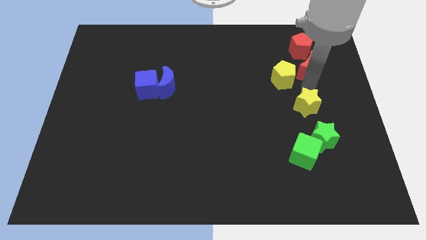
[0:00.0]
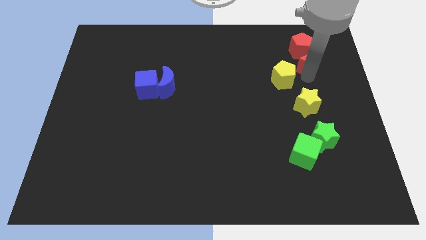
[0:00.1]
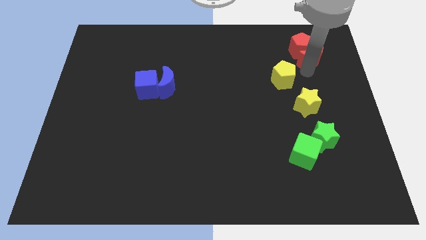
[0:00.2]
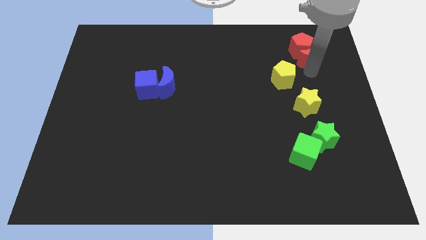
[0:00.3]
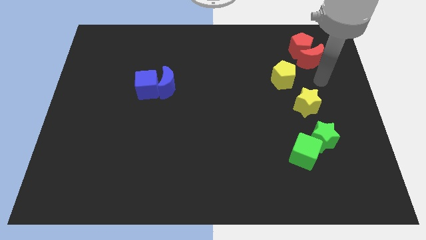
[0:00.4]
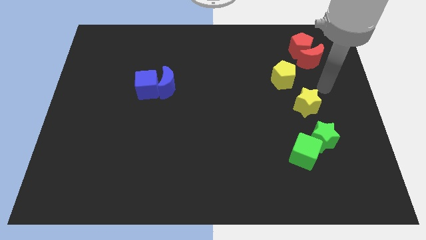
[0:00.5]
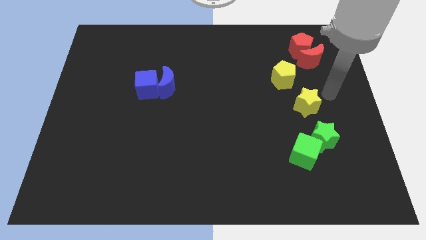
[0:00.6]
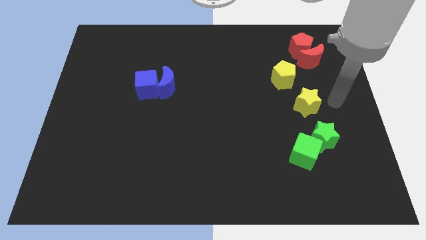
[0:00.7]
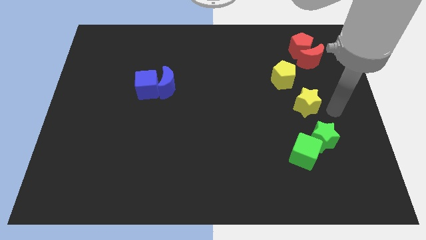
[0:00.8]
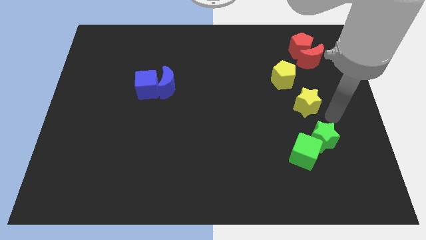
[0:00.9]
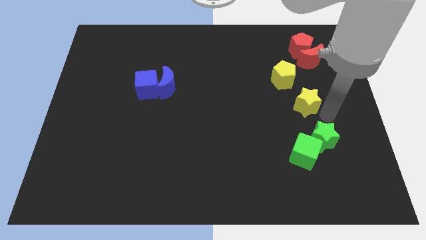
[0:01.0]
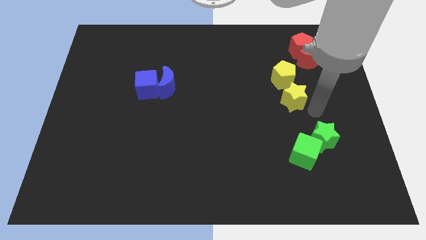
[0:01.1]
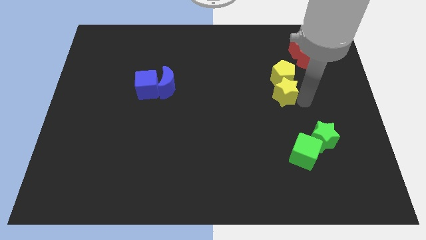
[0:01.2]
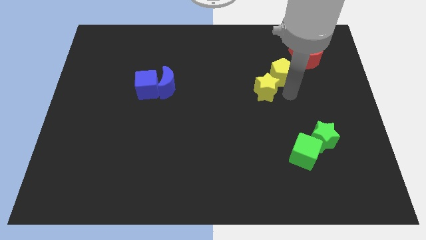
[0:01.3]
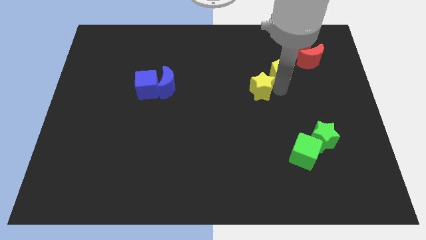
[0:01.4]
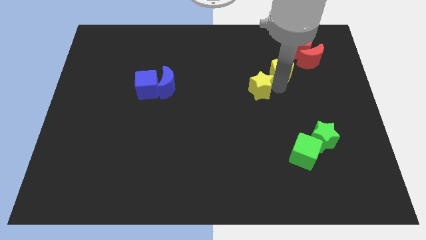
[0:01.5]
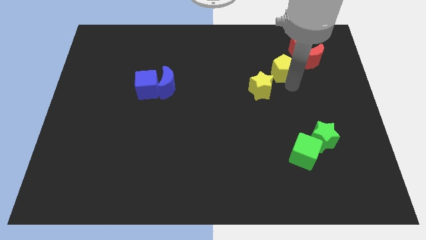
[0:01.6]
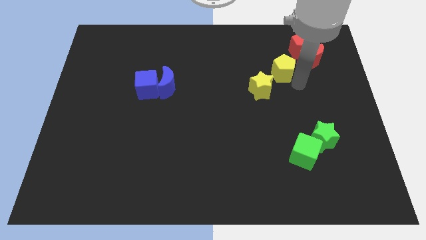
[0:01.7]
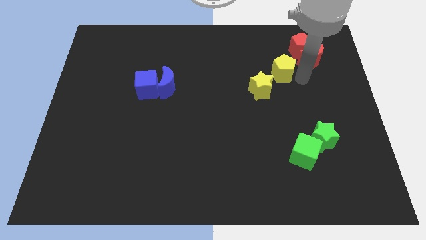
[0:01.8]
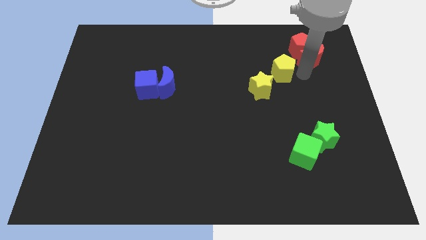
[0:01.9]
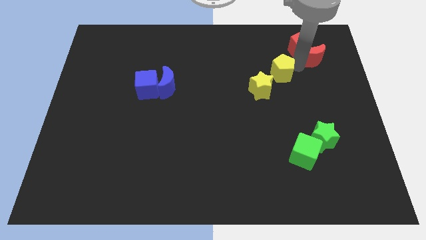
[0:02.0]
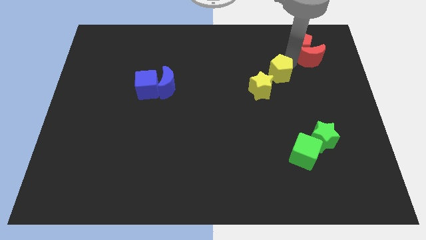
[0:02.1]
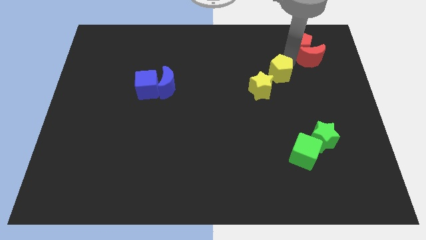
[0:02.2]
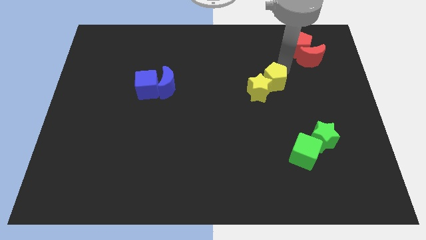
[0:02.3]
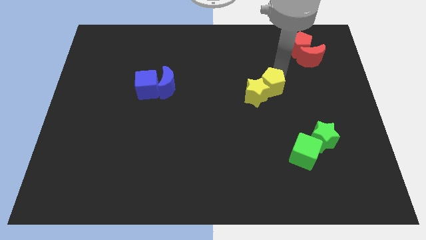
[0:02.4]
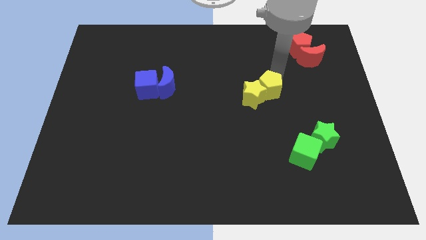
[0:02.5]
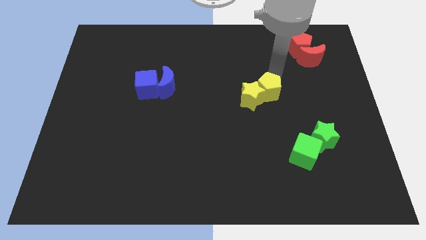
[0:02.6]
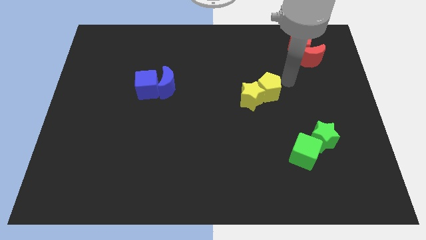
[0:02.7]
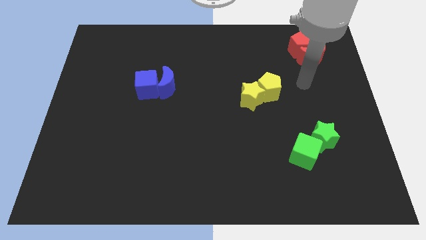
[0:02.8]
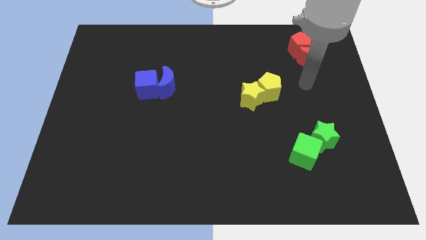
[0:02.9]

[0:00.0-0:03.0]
push the yellow pentagon into the yellow star

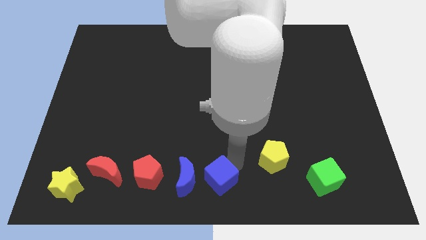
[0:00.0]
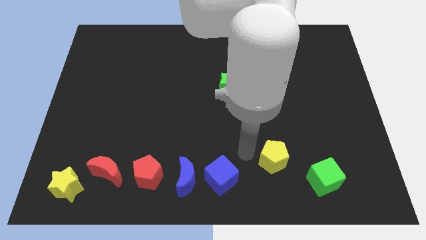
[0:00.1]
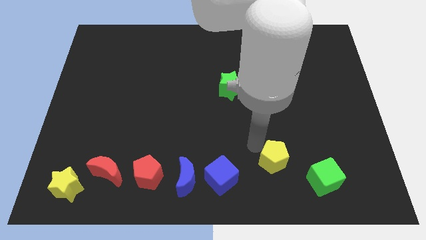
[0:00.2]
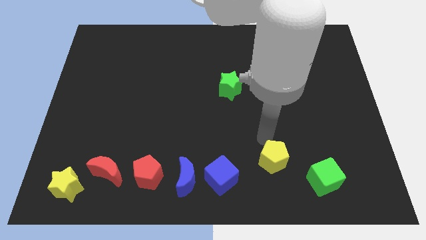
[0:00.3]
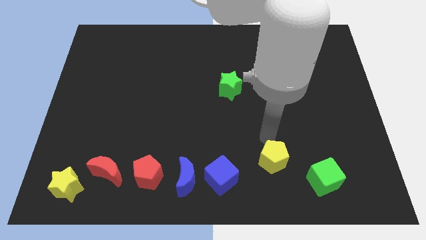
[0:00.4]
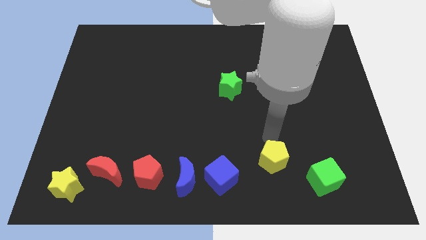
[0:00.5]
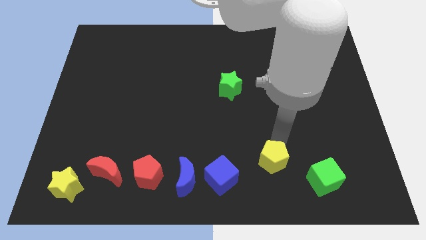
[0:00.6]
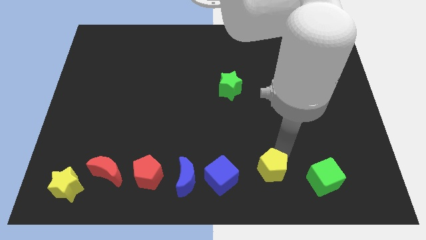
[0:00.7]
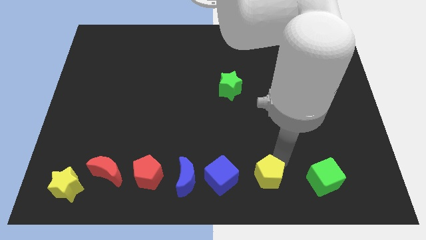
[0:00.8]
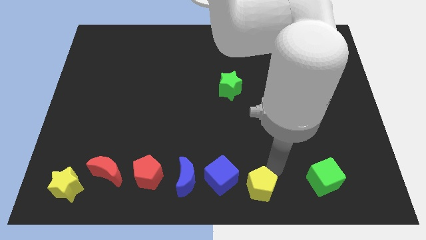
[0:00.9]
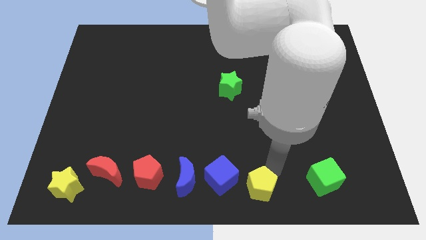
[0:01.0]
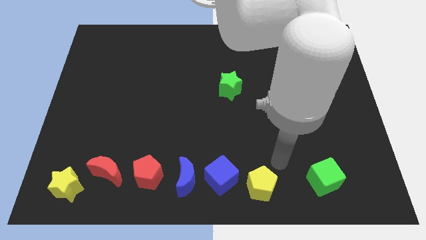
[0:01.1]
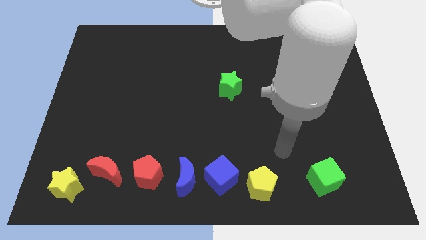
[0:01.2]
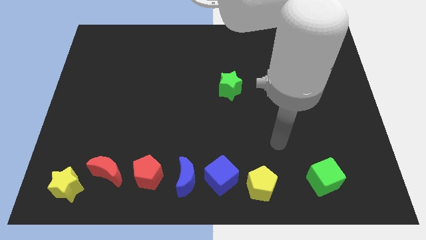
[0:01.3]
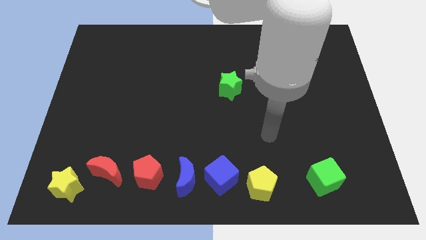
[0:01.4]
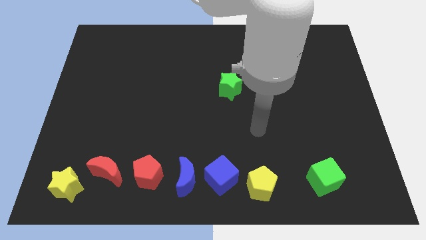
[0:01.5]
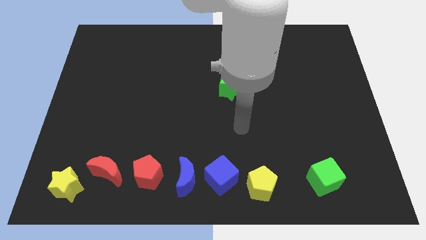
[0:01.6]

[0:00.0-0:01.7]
push the yellow pentagon right to the blue cube

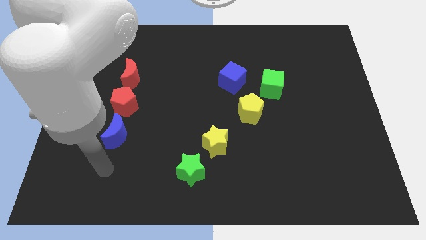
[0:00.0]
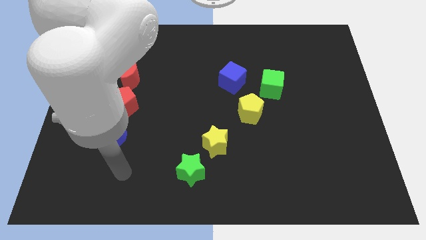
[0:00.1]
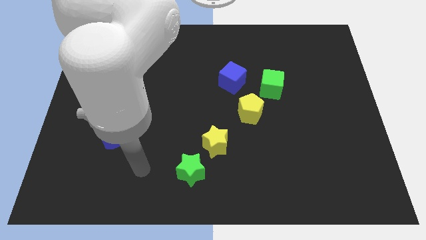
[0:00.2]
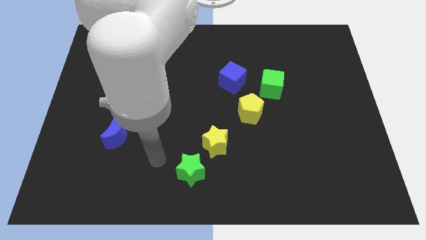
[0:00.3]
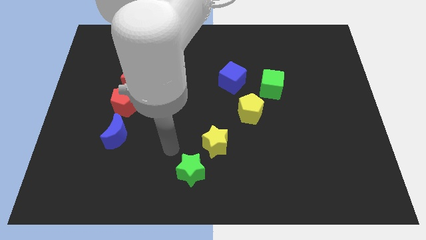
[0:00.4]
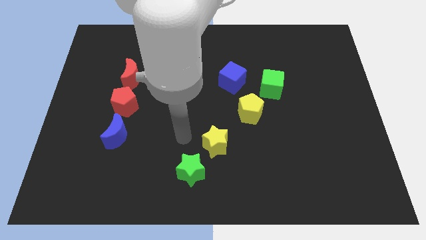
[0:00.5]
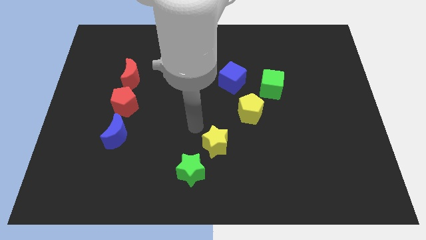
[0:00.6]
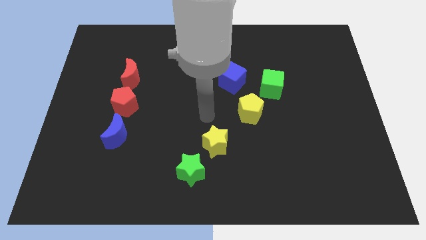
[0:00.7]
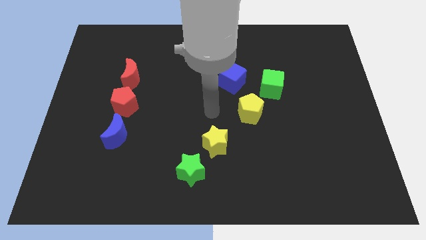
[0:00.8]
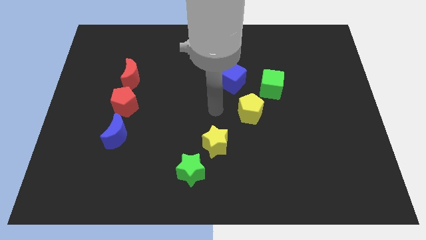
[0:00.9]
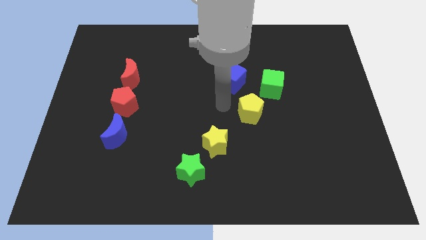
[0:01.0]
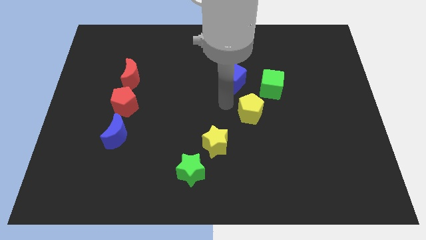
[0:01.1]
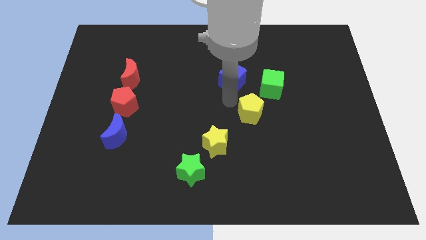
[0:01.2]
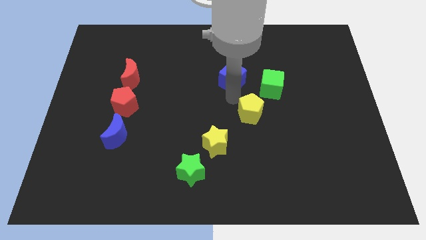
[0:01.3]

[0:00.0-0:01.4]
move your arm to the bottom of blue cube

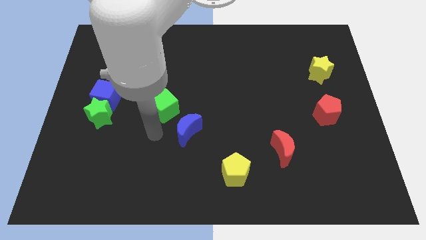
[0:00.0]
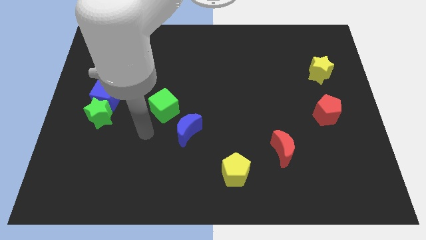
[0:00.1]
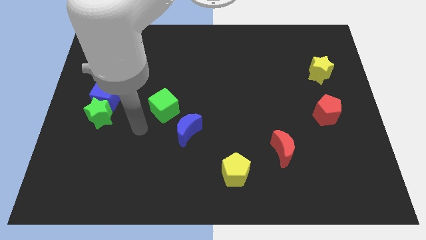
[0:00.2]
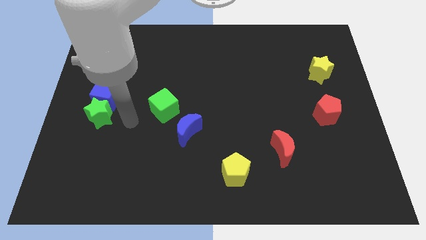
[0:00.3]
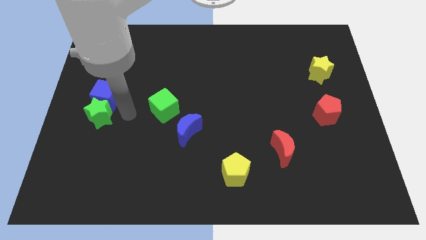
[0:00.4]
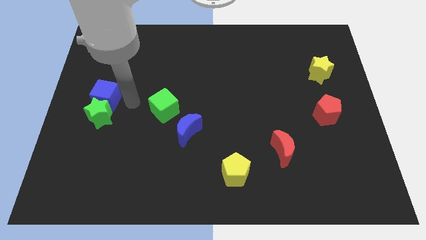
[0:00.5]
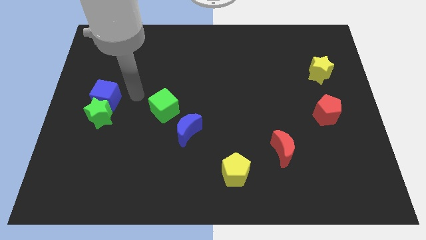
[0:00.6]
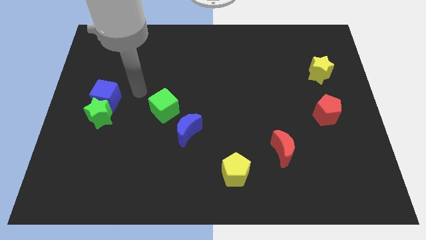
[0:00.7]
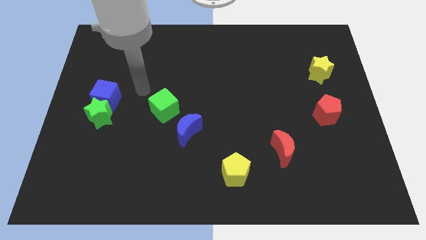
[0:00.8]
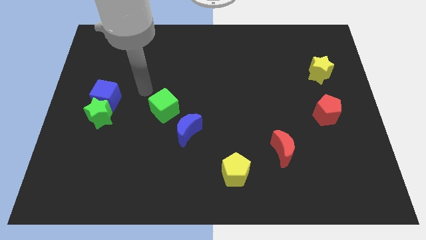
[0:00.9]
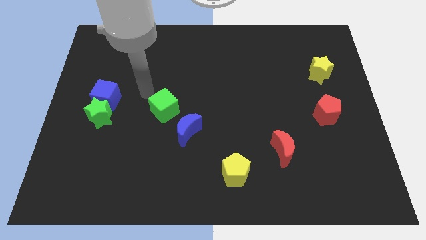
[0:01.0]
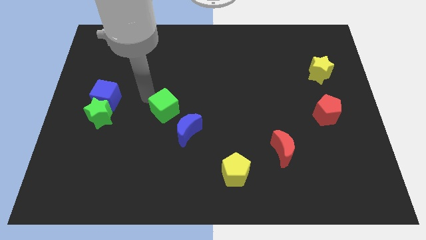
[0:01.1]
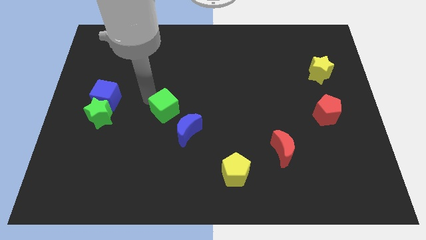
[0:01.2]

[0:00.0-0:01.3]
move your arm to the top of the green cube

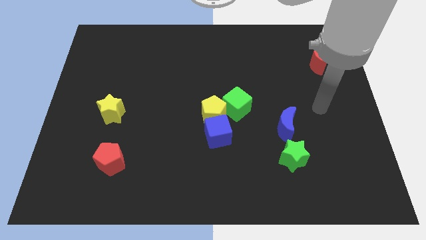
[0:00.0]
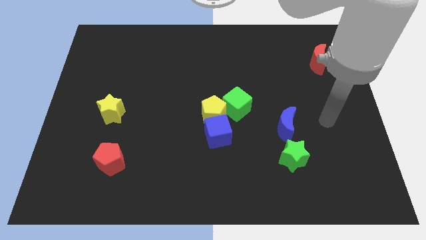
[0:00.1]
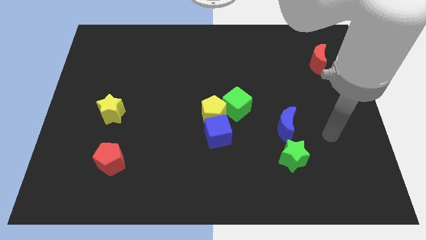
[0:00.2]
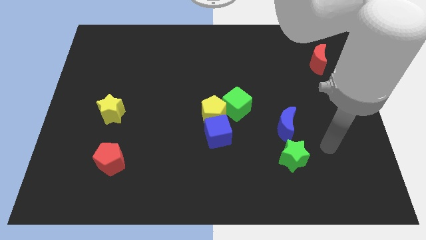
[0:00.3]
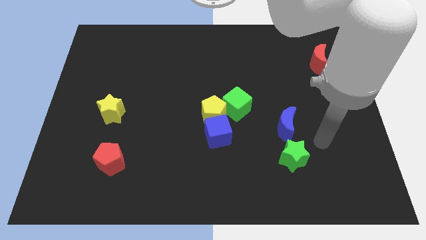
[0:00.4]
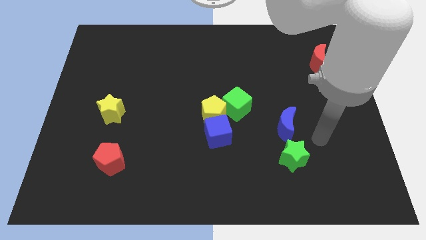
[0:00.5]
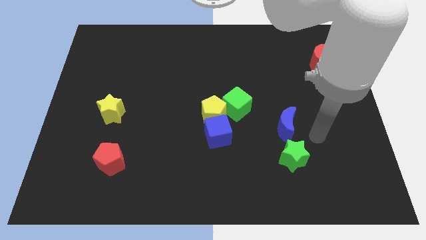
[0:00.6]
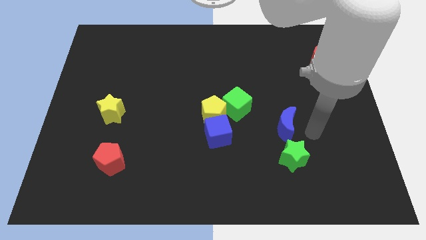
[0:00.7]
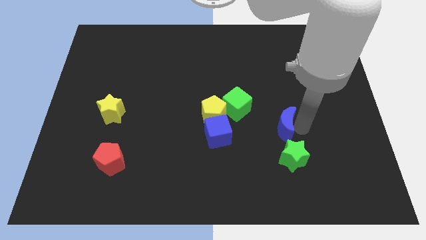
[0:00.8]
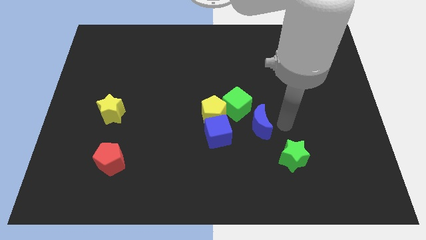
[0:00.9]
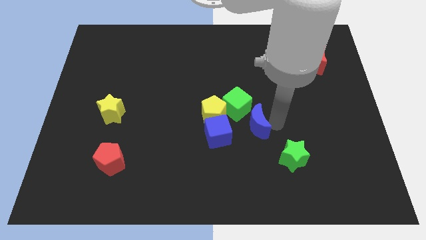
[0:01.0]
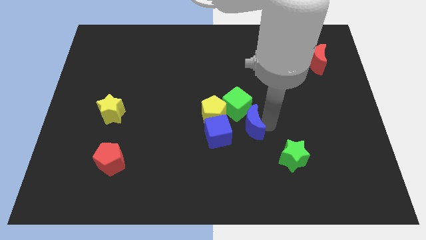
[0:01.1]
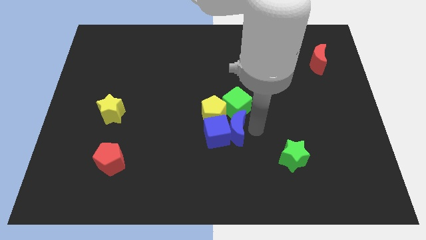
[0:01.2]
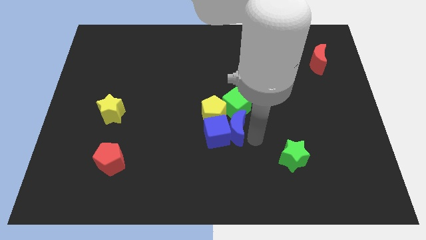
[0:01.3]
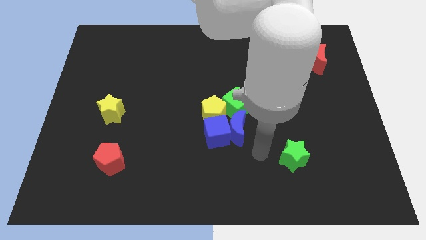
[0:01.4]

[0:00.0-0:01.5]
move the blue moon into the blue cube
